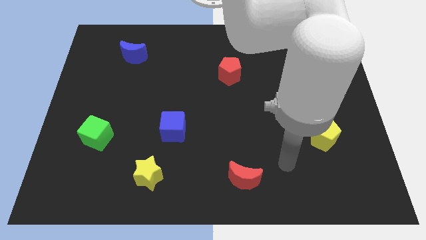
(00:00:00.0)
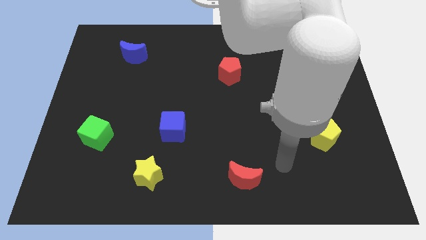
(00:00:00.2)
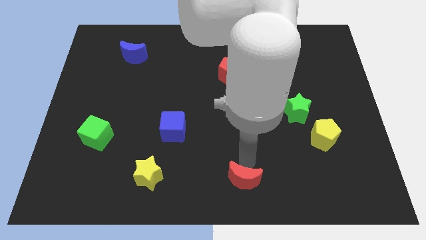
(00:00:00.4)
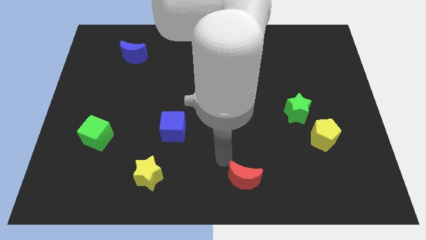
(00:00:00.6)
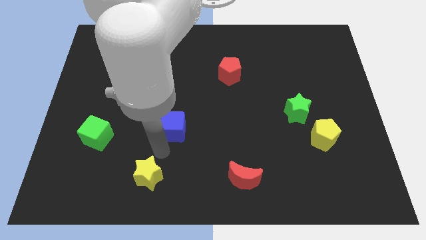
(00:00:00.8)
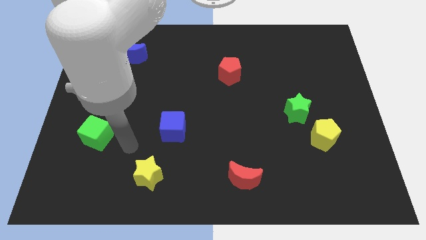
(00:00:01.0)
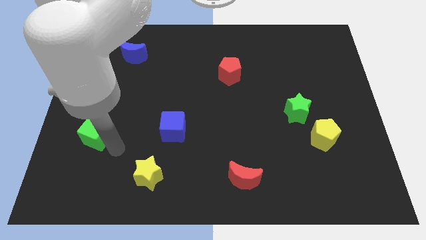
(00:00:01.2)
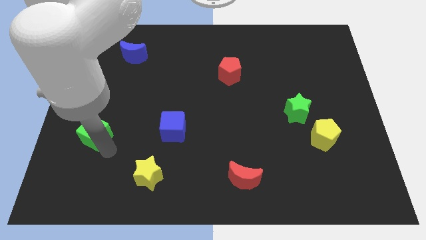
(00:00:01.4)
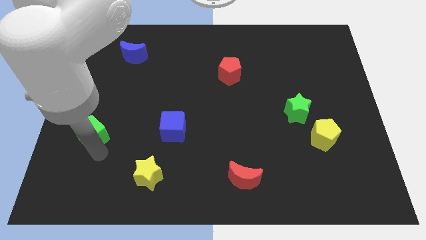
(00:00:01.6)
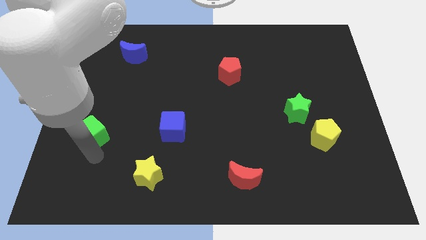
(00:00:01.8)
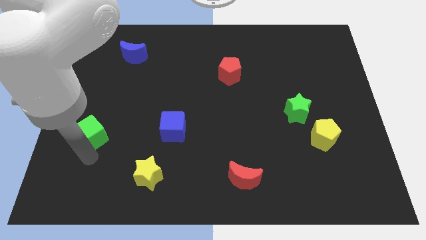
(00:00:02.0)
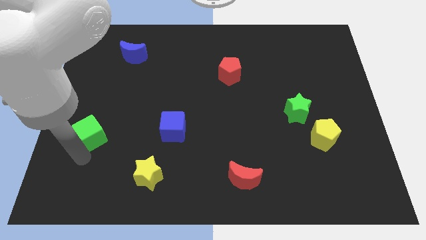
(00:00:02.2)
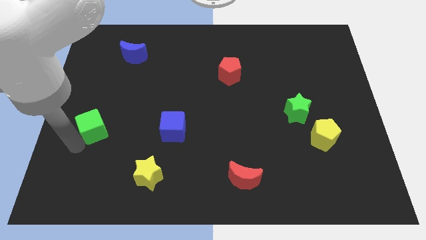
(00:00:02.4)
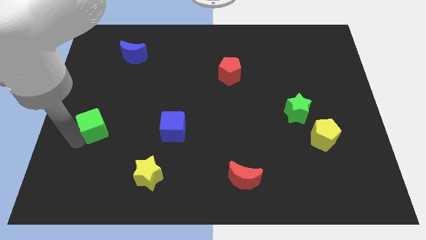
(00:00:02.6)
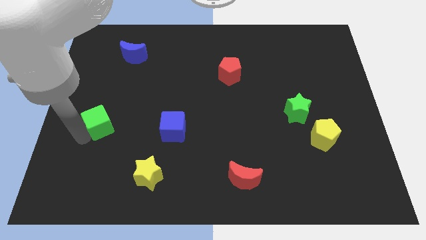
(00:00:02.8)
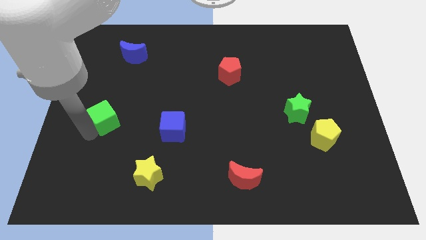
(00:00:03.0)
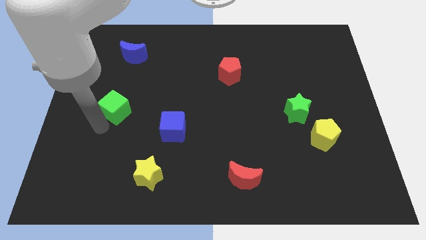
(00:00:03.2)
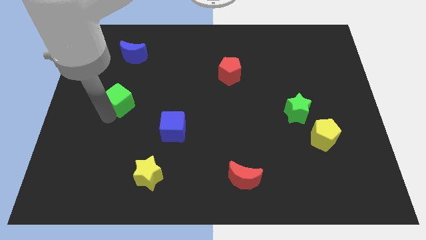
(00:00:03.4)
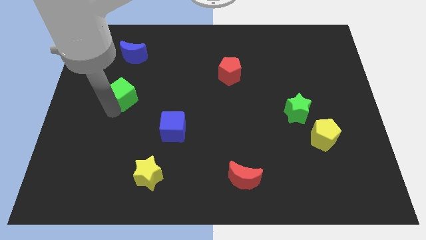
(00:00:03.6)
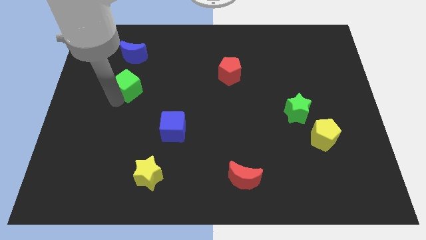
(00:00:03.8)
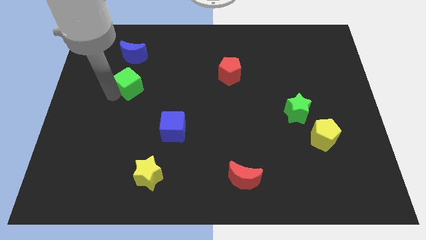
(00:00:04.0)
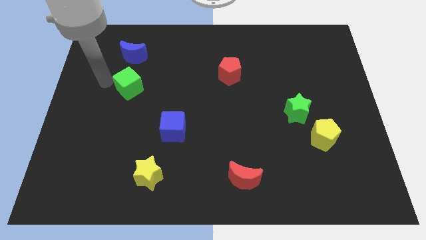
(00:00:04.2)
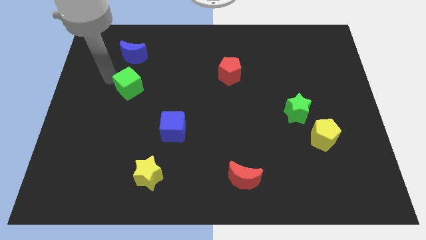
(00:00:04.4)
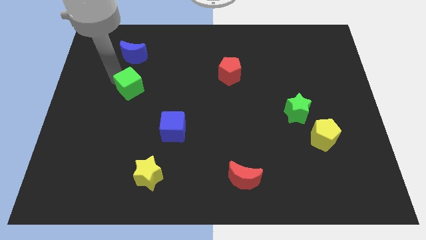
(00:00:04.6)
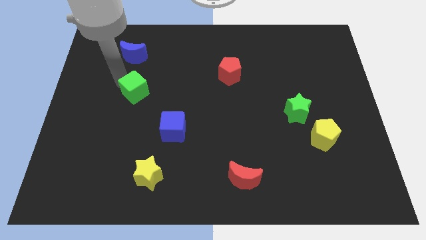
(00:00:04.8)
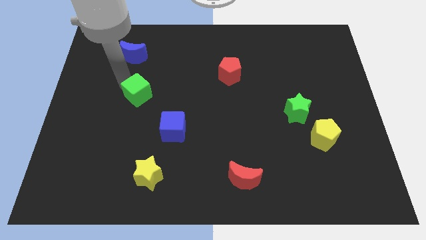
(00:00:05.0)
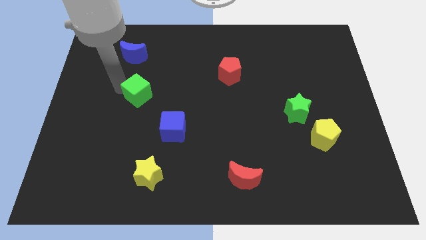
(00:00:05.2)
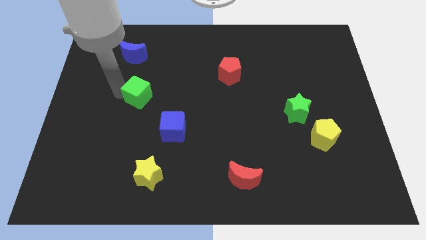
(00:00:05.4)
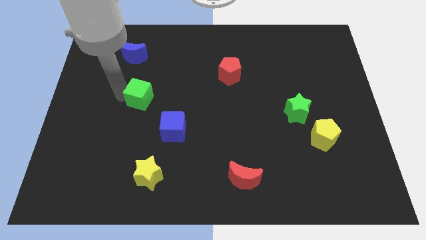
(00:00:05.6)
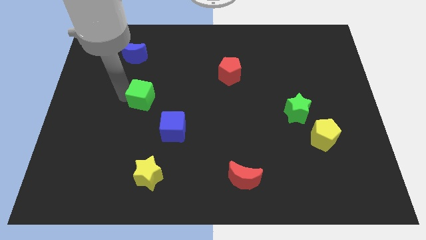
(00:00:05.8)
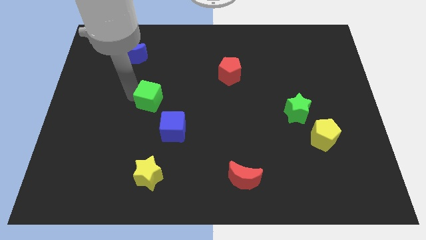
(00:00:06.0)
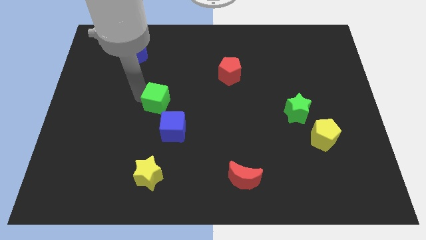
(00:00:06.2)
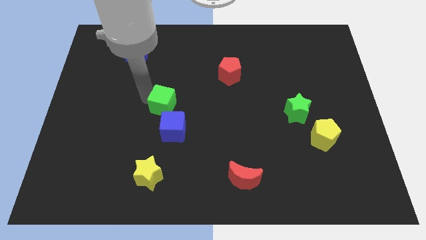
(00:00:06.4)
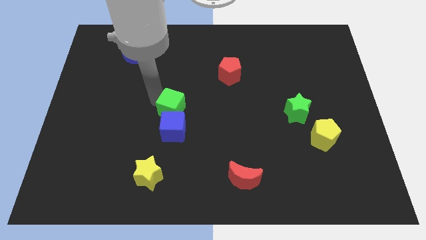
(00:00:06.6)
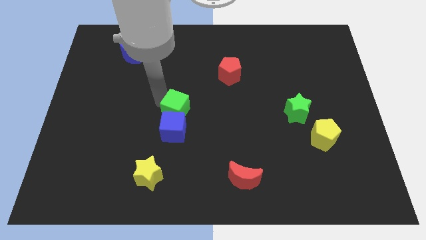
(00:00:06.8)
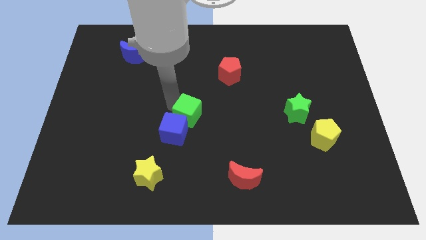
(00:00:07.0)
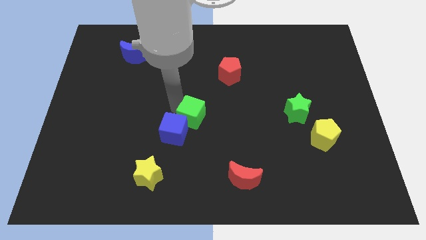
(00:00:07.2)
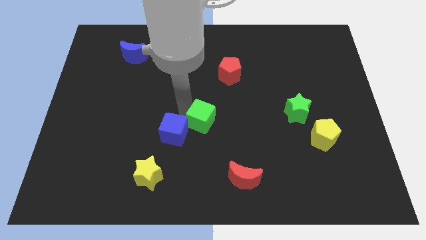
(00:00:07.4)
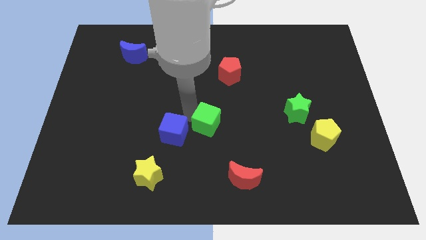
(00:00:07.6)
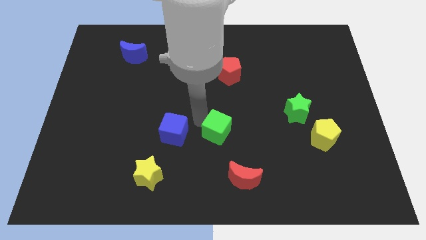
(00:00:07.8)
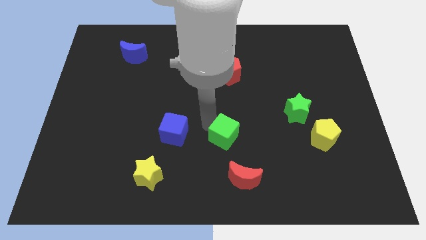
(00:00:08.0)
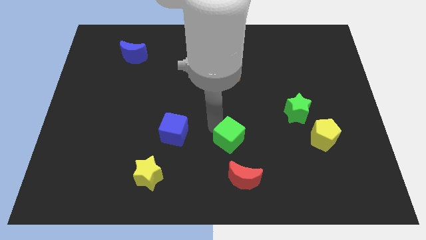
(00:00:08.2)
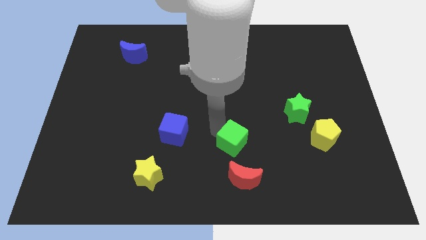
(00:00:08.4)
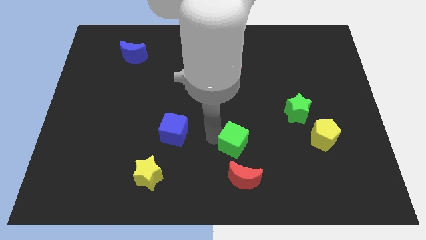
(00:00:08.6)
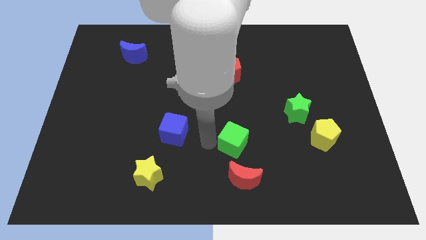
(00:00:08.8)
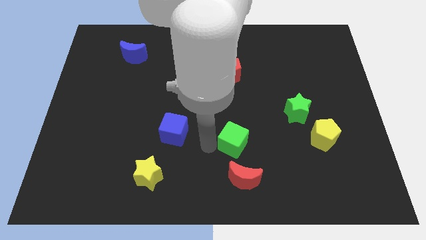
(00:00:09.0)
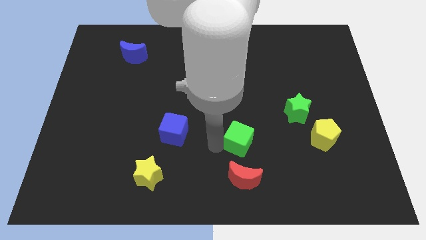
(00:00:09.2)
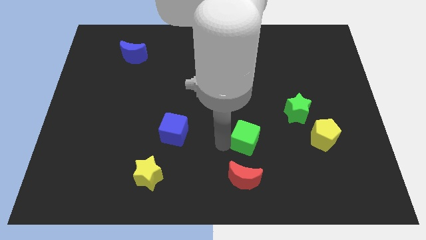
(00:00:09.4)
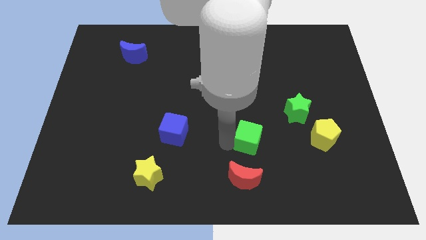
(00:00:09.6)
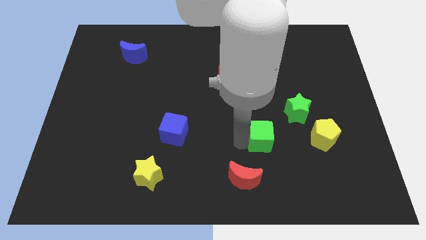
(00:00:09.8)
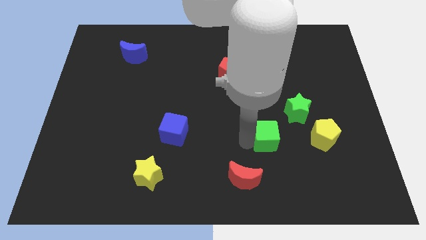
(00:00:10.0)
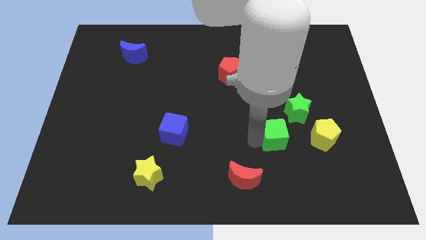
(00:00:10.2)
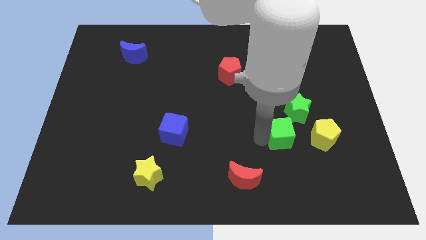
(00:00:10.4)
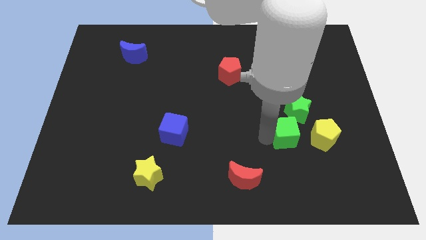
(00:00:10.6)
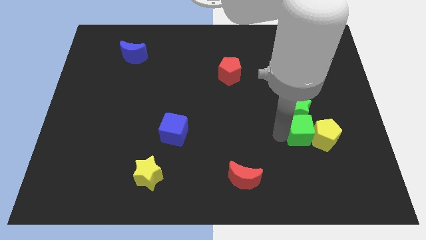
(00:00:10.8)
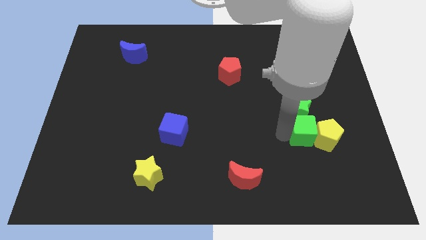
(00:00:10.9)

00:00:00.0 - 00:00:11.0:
slide the green cube next to the yellow pentagon

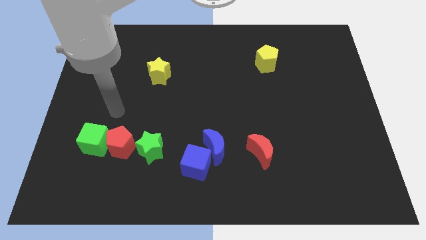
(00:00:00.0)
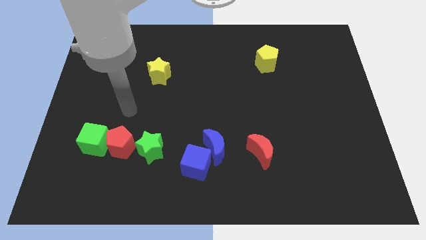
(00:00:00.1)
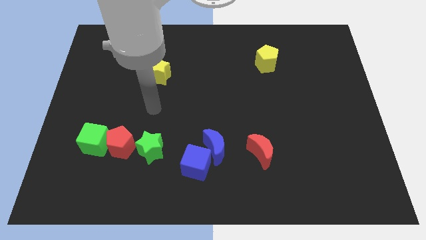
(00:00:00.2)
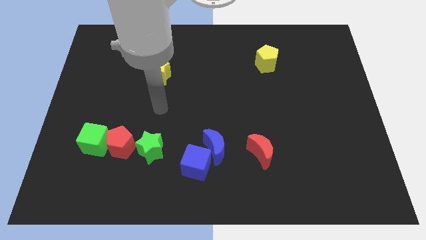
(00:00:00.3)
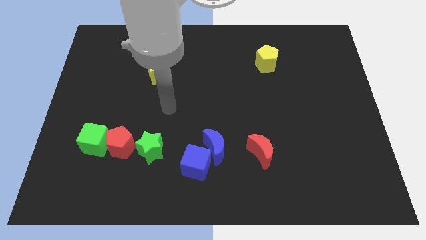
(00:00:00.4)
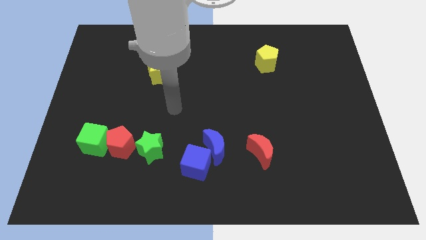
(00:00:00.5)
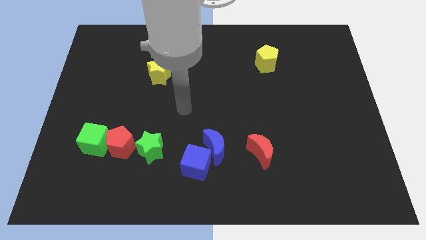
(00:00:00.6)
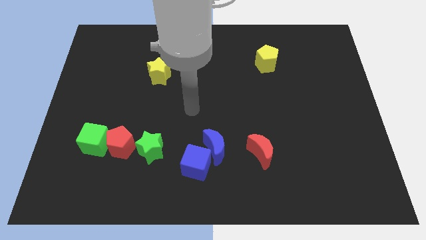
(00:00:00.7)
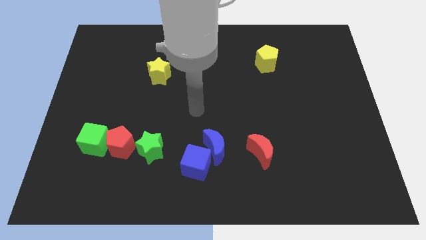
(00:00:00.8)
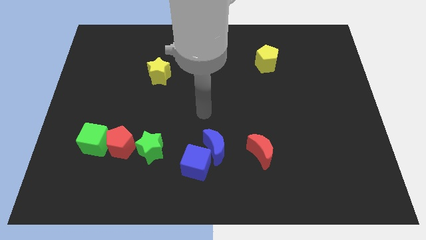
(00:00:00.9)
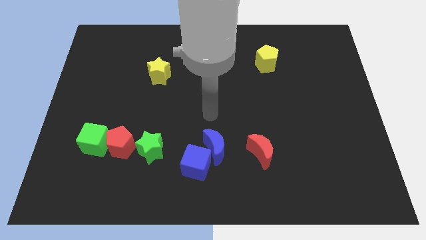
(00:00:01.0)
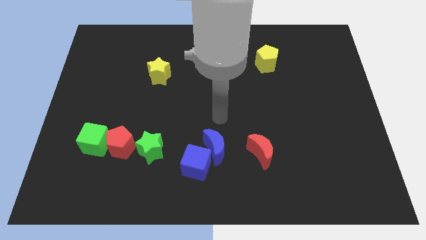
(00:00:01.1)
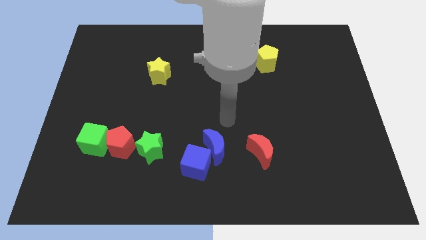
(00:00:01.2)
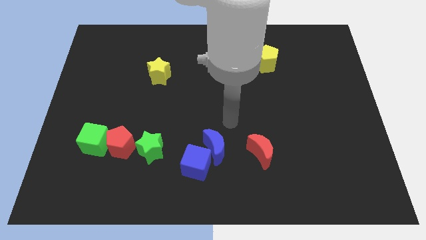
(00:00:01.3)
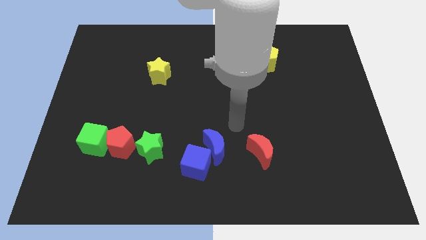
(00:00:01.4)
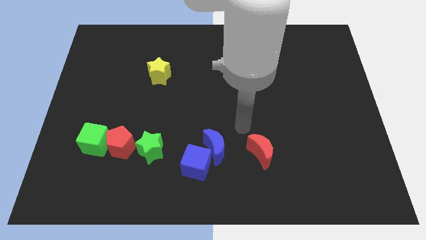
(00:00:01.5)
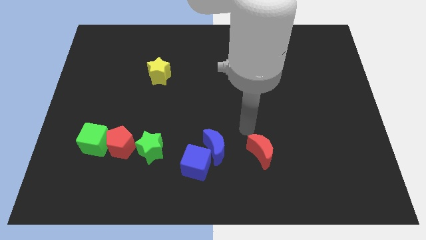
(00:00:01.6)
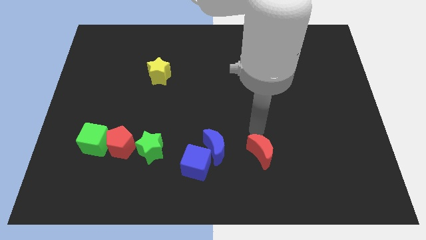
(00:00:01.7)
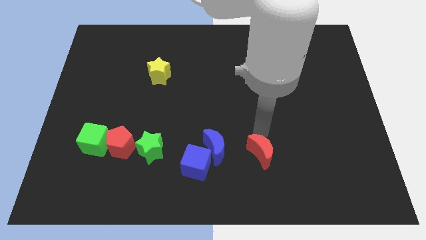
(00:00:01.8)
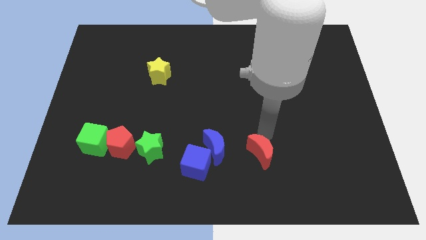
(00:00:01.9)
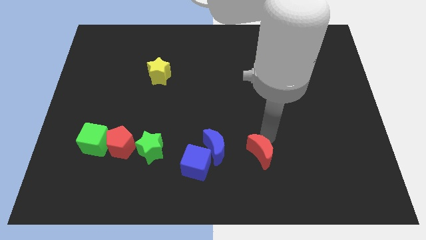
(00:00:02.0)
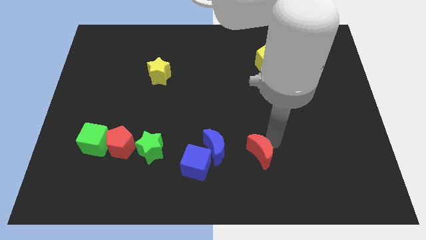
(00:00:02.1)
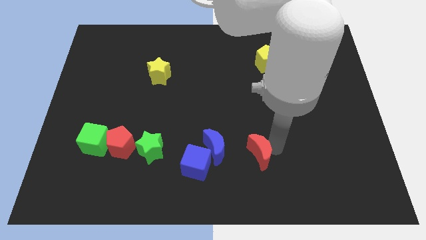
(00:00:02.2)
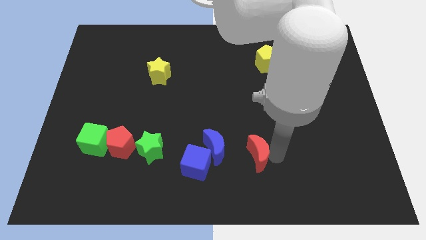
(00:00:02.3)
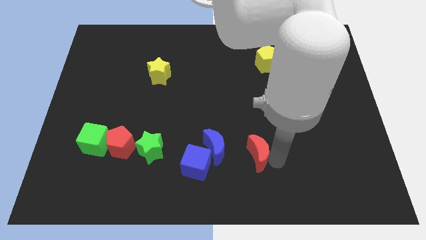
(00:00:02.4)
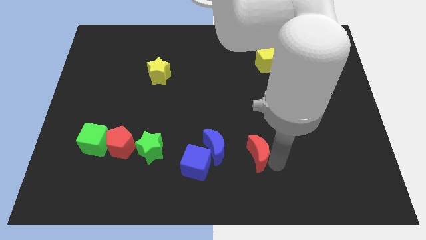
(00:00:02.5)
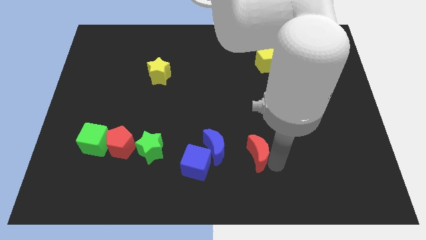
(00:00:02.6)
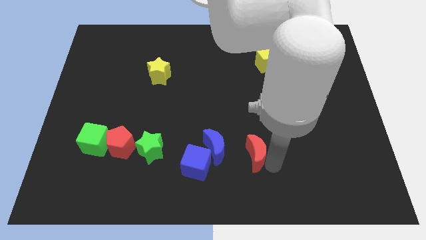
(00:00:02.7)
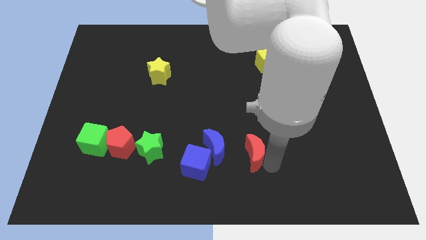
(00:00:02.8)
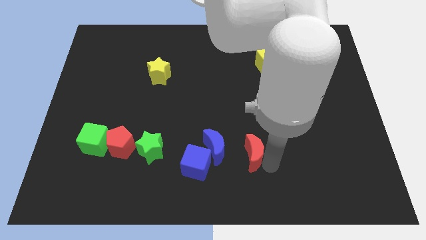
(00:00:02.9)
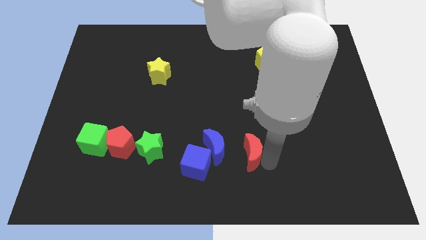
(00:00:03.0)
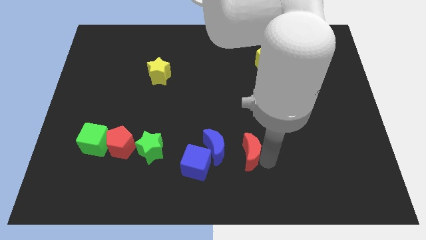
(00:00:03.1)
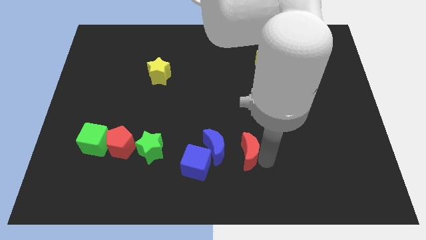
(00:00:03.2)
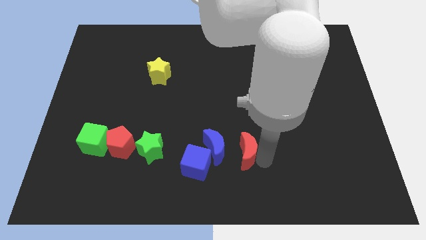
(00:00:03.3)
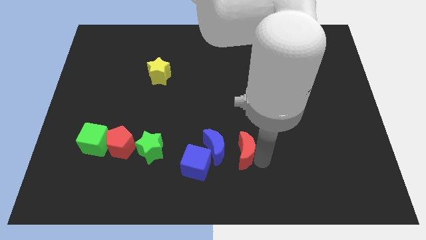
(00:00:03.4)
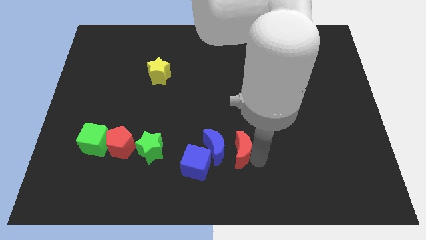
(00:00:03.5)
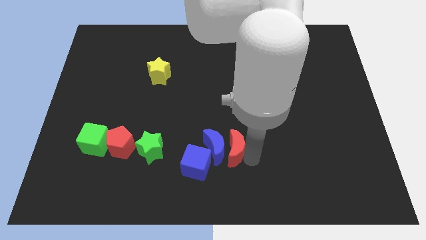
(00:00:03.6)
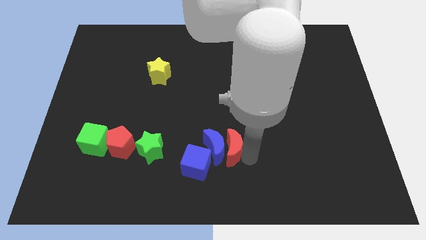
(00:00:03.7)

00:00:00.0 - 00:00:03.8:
put the red moon to the blue moon
